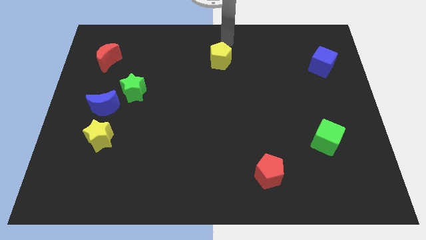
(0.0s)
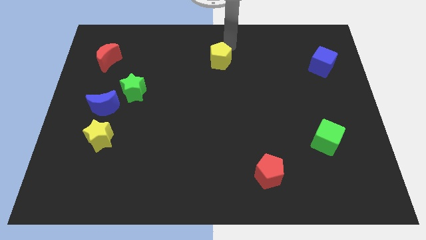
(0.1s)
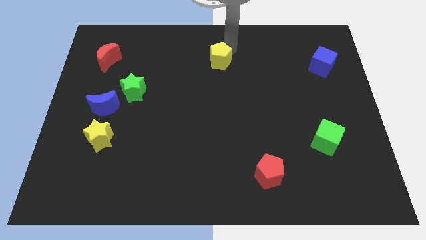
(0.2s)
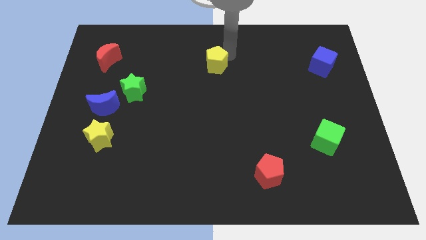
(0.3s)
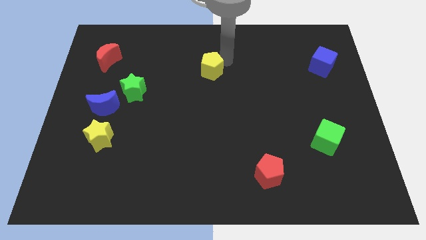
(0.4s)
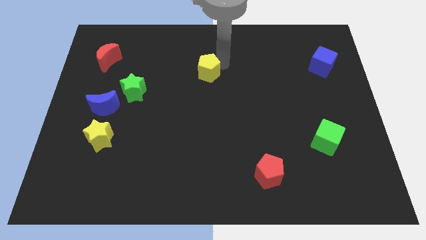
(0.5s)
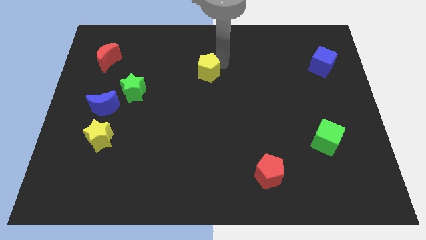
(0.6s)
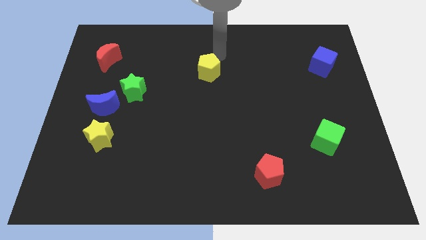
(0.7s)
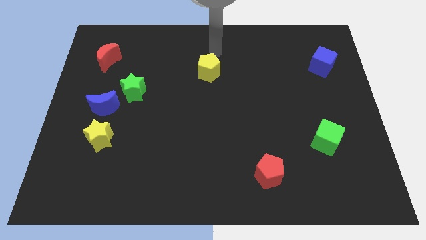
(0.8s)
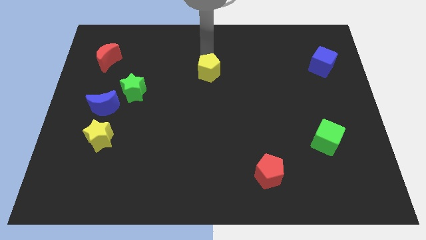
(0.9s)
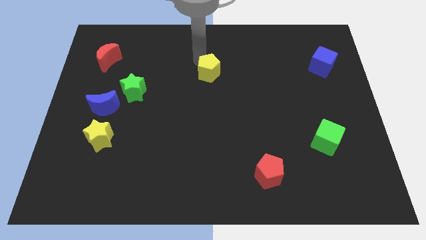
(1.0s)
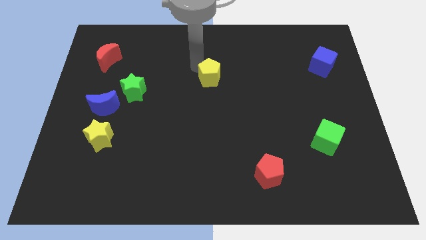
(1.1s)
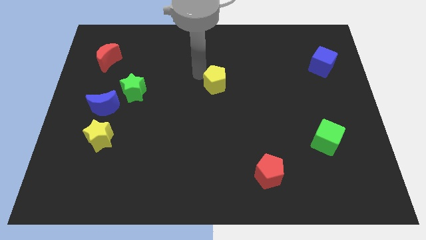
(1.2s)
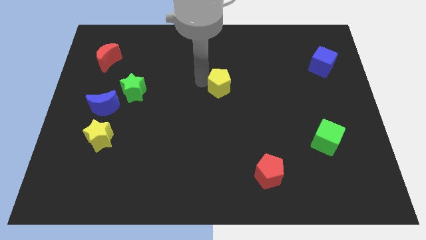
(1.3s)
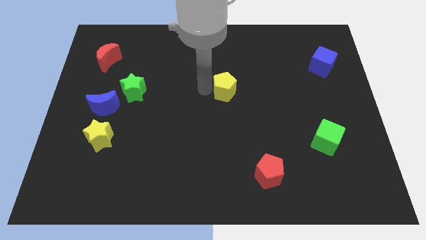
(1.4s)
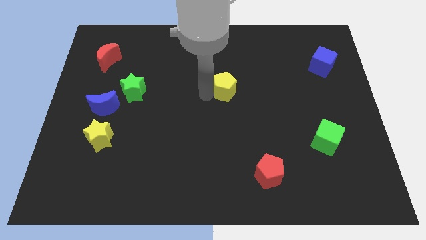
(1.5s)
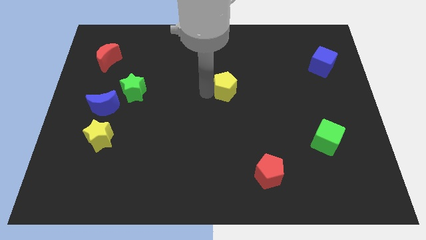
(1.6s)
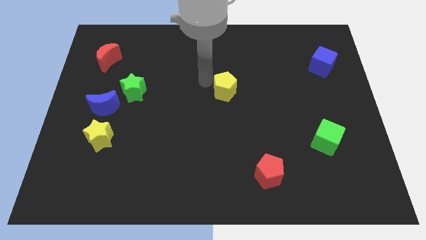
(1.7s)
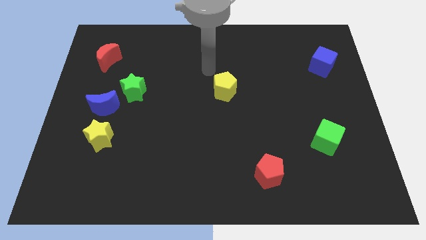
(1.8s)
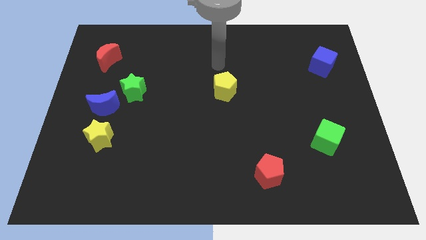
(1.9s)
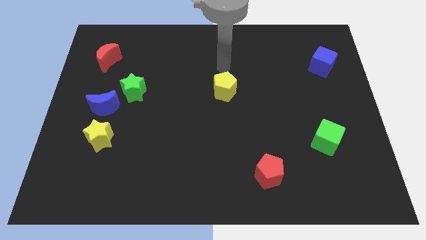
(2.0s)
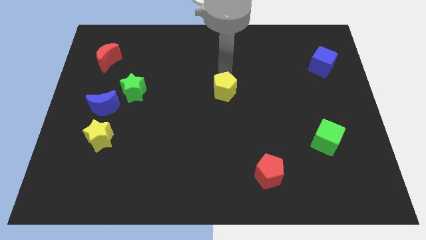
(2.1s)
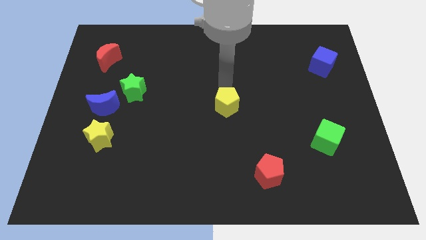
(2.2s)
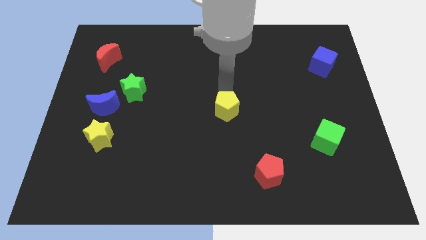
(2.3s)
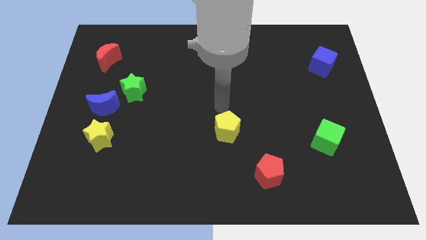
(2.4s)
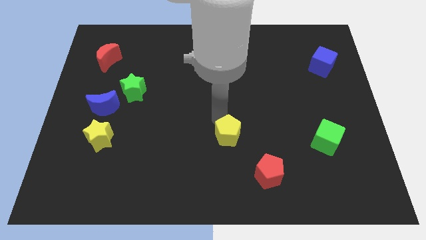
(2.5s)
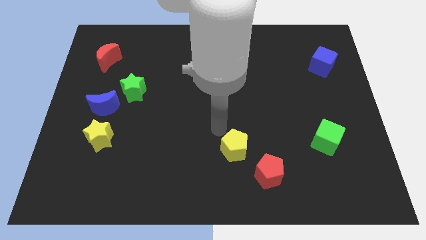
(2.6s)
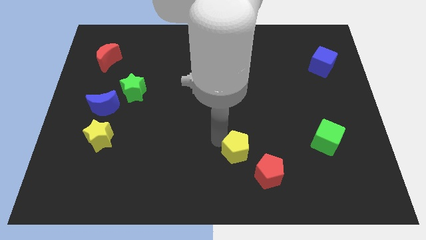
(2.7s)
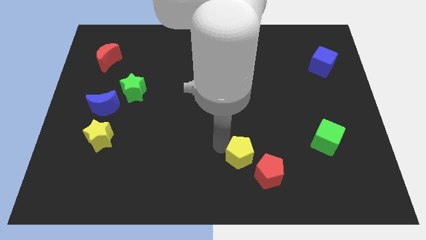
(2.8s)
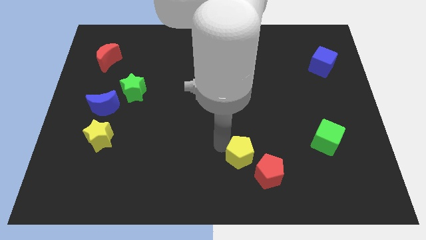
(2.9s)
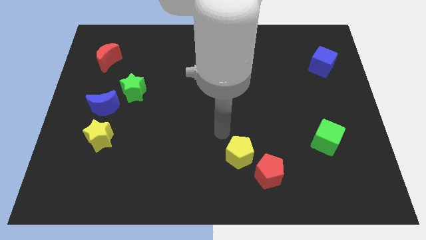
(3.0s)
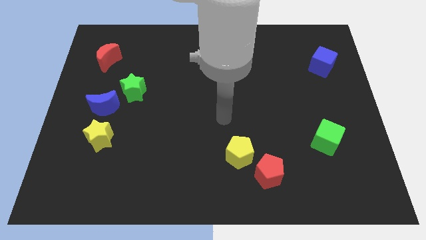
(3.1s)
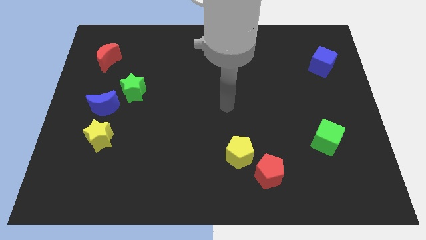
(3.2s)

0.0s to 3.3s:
push the yellow pentagon towards the red pentagon

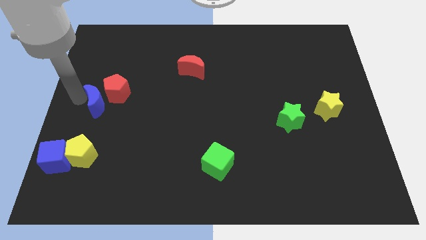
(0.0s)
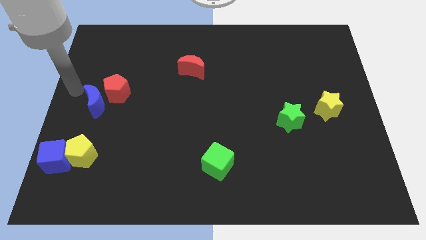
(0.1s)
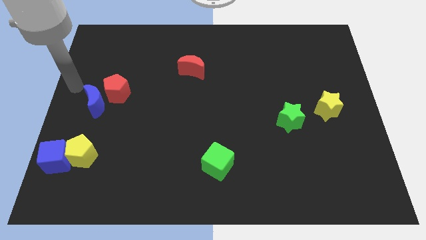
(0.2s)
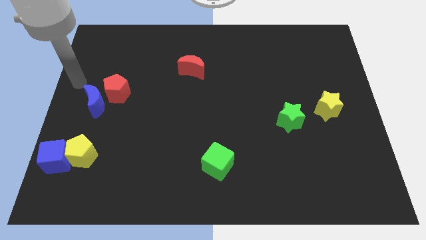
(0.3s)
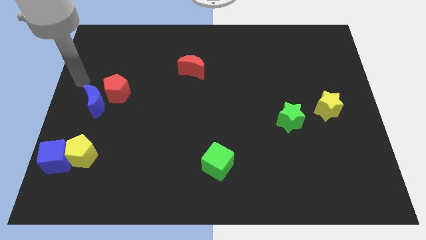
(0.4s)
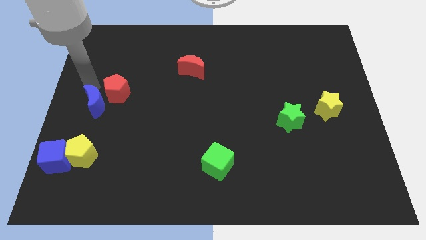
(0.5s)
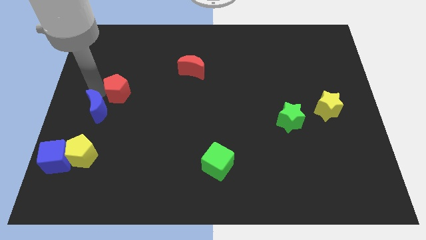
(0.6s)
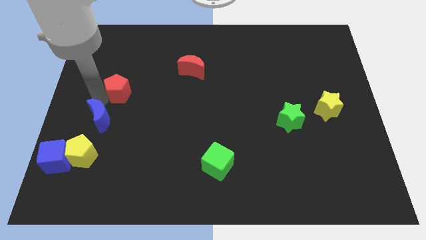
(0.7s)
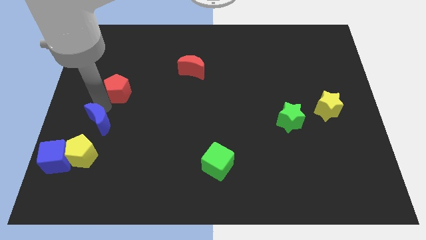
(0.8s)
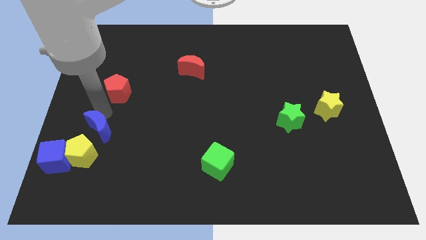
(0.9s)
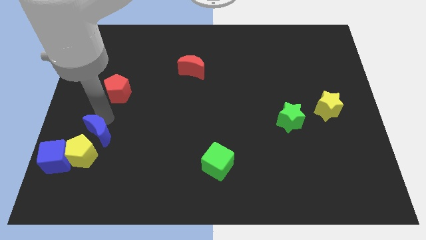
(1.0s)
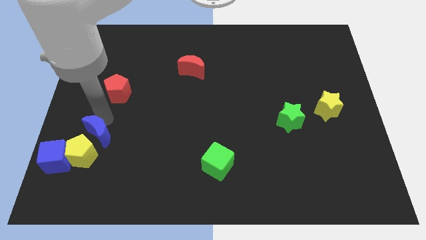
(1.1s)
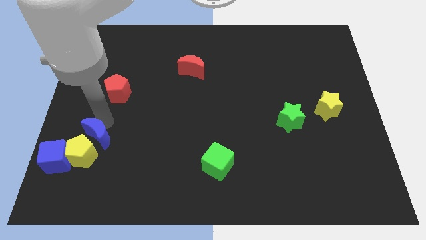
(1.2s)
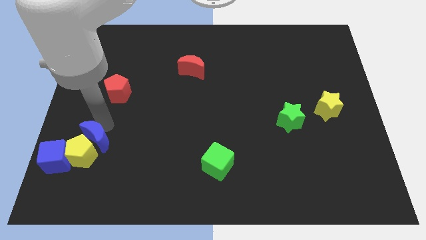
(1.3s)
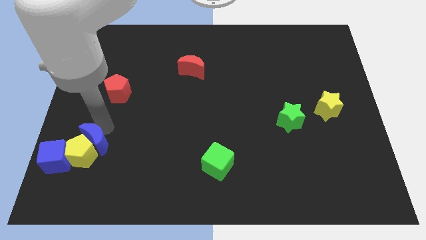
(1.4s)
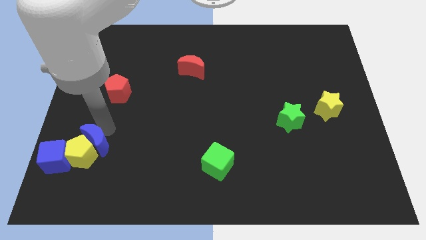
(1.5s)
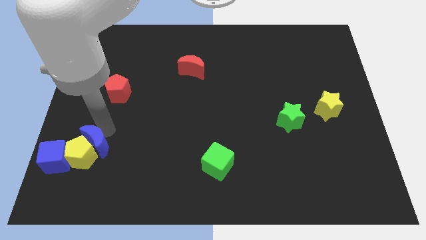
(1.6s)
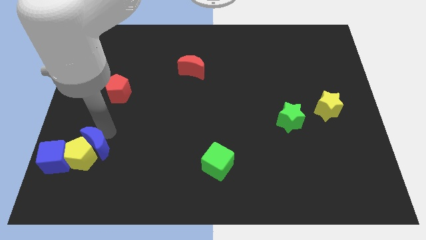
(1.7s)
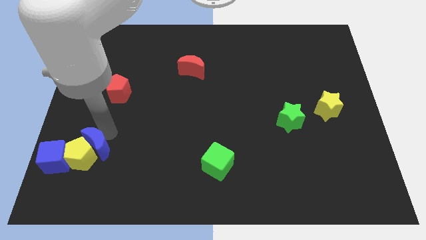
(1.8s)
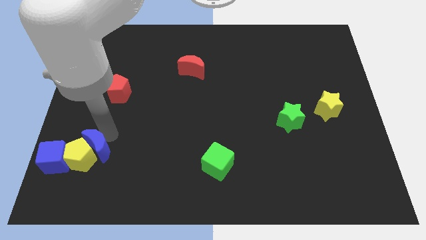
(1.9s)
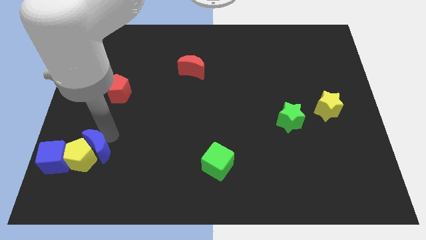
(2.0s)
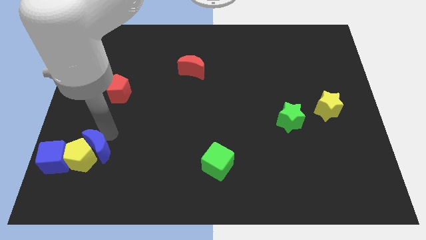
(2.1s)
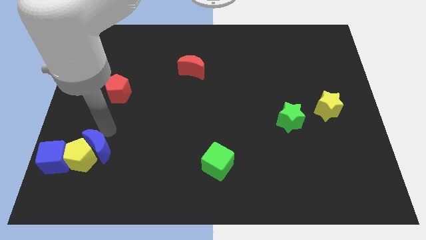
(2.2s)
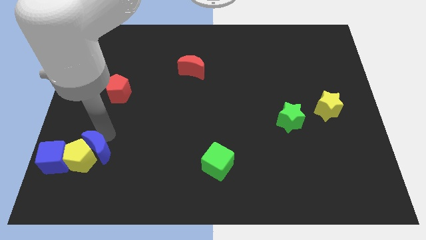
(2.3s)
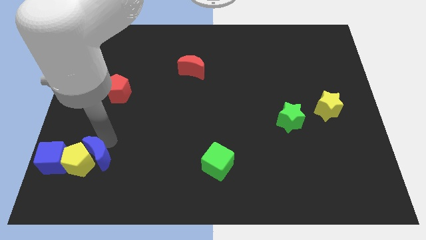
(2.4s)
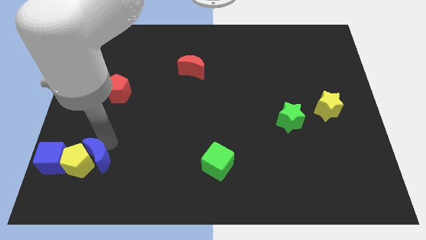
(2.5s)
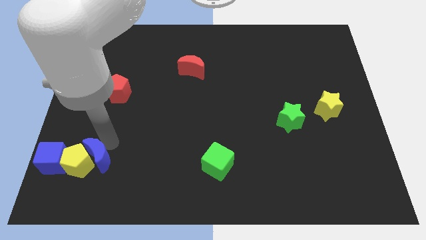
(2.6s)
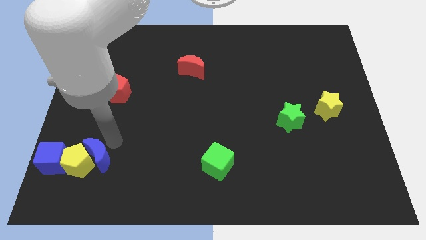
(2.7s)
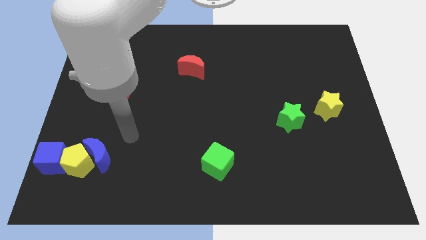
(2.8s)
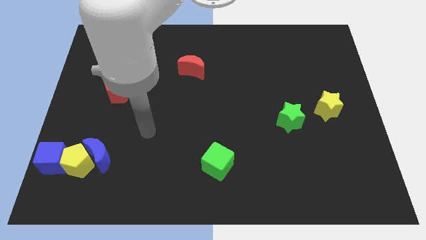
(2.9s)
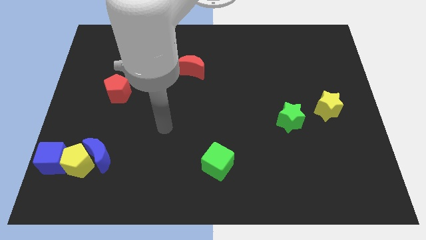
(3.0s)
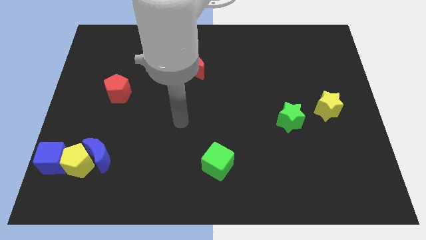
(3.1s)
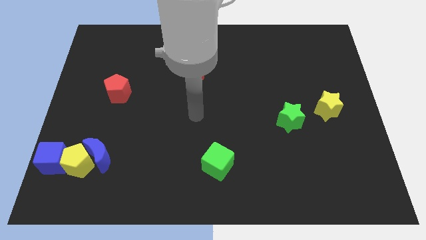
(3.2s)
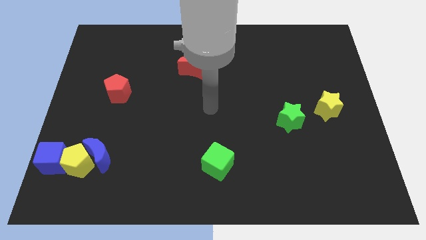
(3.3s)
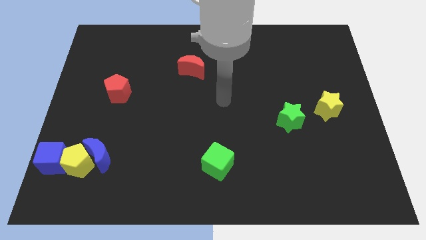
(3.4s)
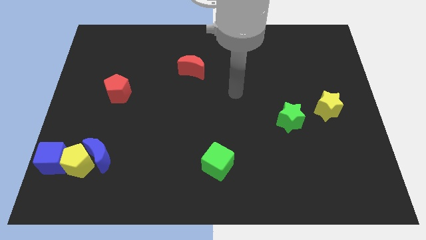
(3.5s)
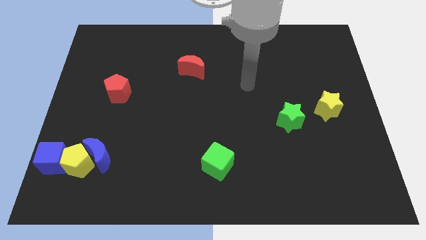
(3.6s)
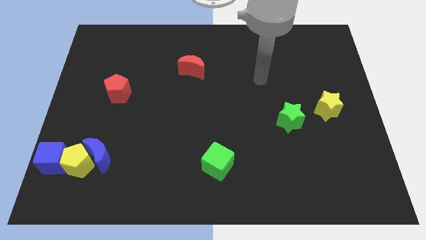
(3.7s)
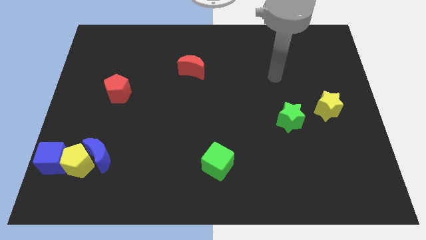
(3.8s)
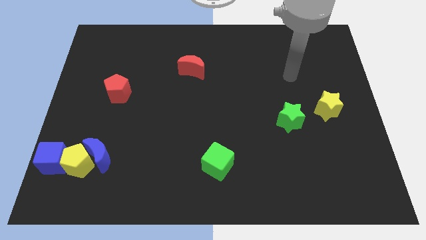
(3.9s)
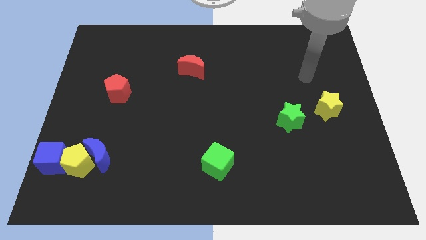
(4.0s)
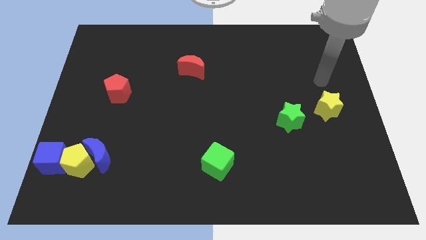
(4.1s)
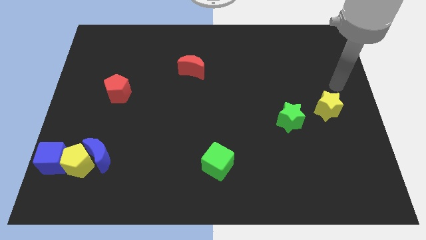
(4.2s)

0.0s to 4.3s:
move the blue moon right to the yellow pentagon

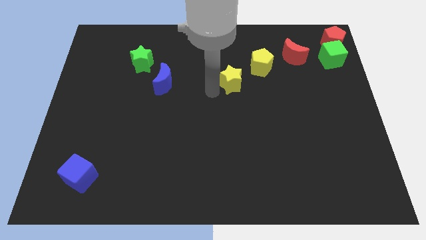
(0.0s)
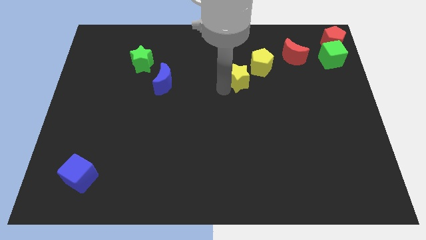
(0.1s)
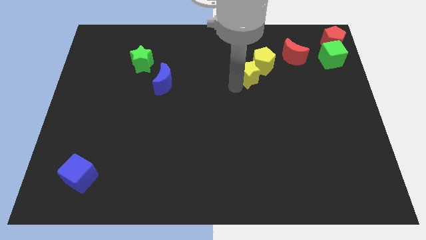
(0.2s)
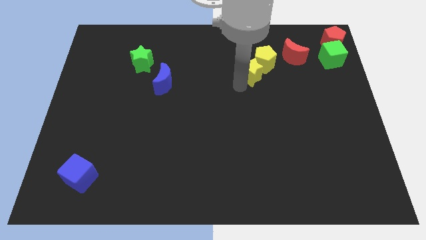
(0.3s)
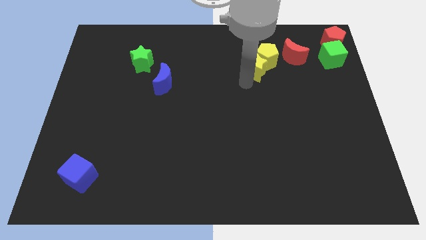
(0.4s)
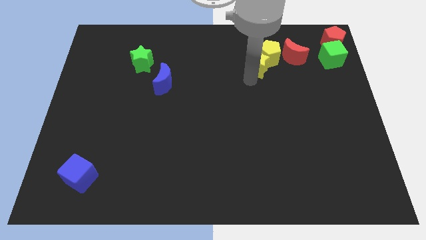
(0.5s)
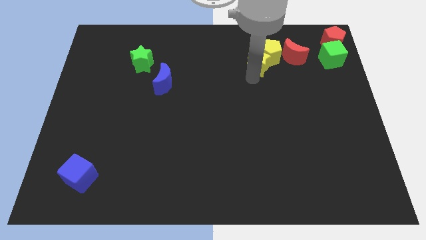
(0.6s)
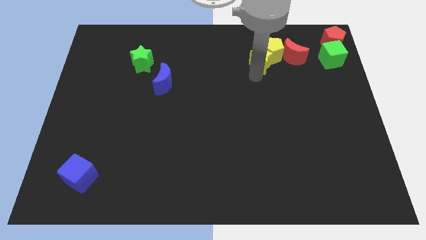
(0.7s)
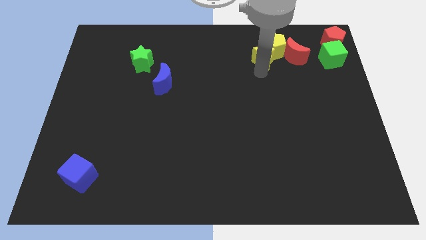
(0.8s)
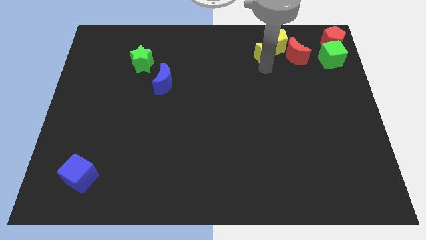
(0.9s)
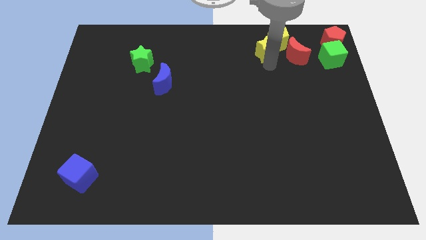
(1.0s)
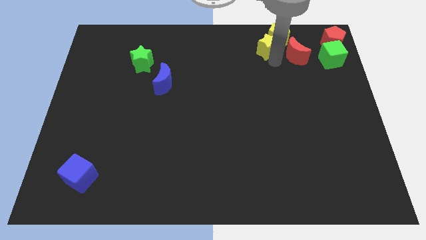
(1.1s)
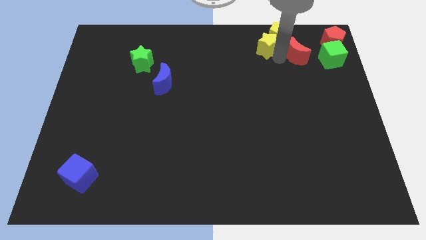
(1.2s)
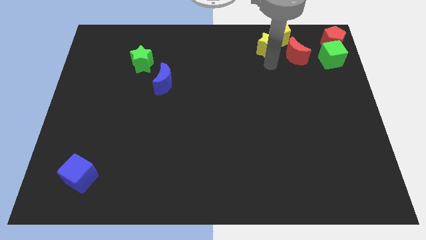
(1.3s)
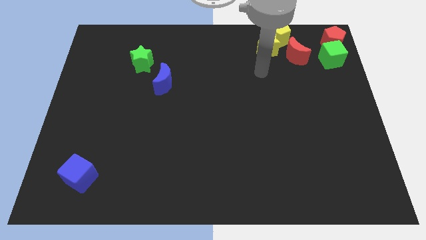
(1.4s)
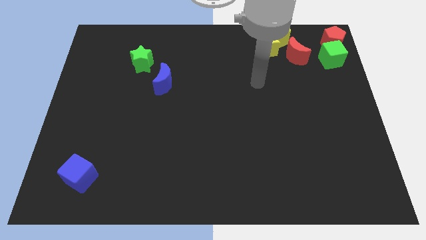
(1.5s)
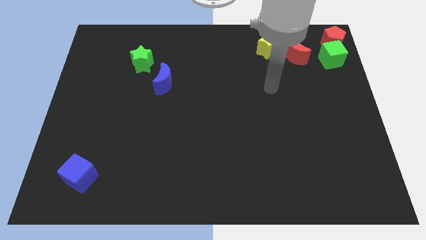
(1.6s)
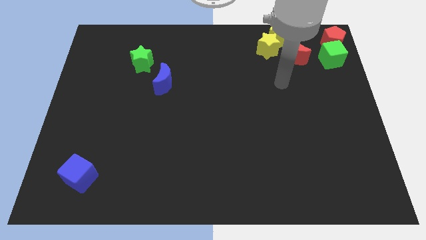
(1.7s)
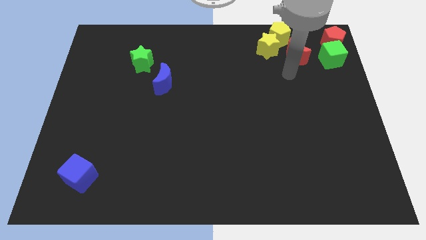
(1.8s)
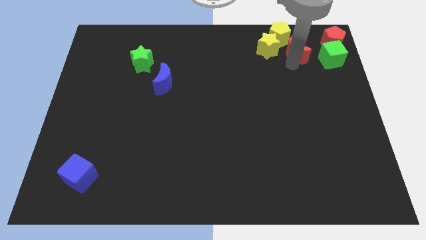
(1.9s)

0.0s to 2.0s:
push the yellow star along with the yellow pentagon towards top right
